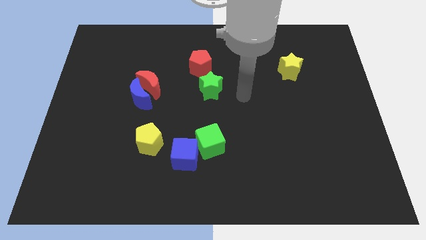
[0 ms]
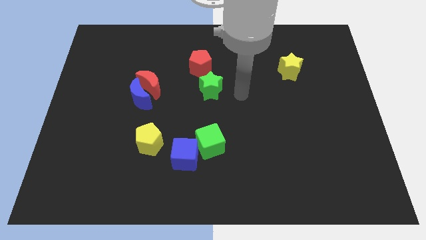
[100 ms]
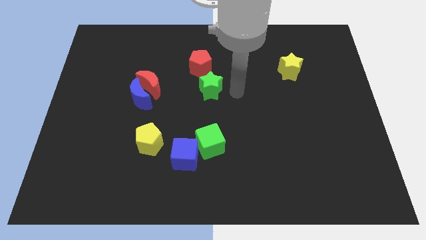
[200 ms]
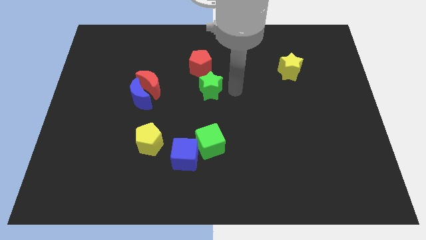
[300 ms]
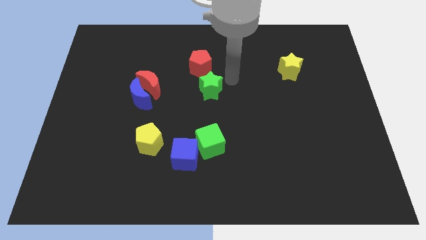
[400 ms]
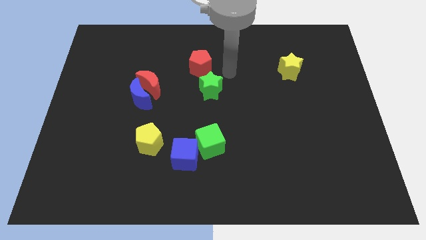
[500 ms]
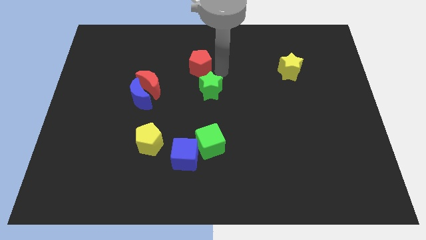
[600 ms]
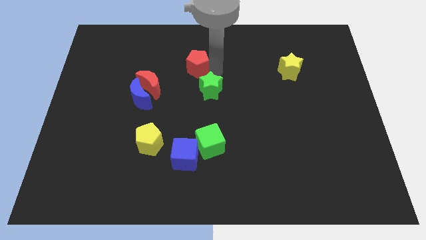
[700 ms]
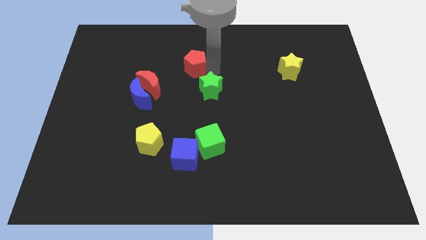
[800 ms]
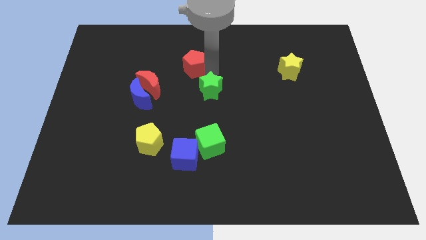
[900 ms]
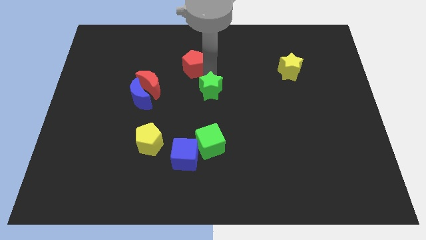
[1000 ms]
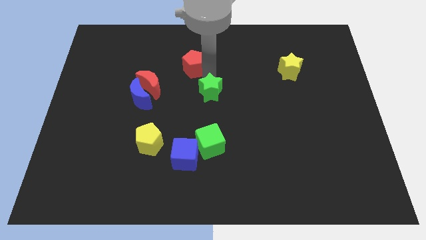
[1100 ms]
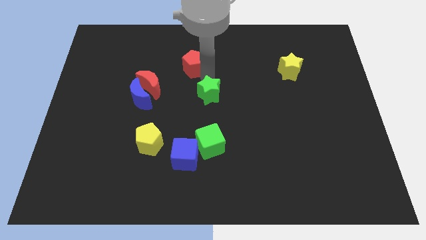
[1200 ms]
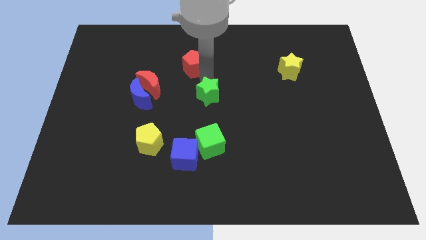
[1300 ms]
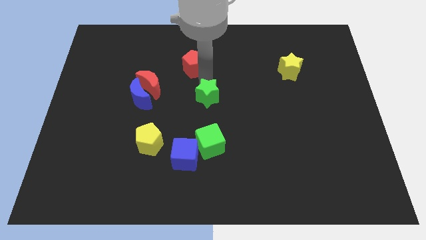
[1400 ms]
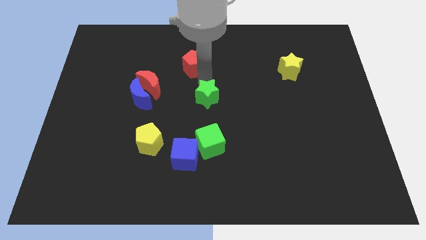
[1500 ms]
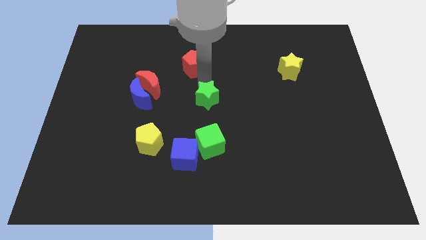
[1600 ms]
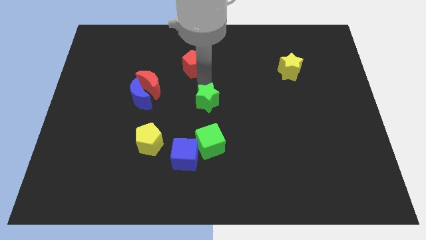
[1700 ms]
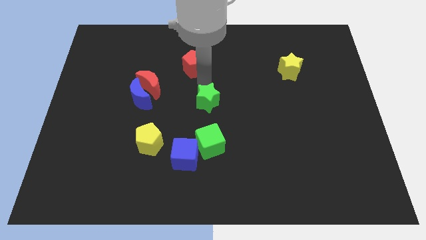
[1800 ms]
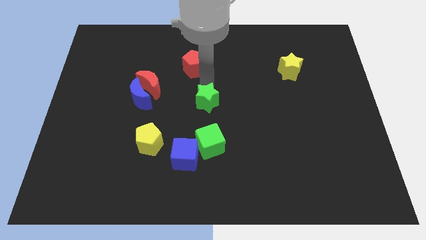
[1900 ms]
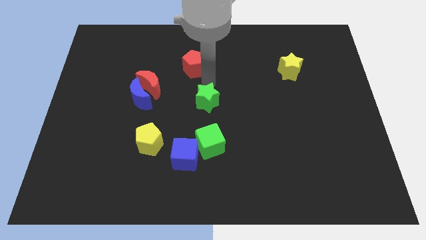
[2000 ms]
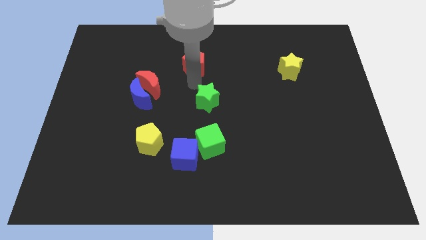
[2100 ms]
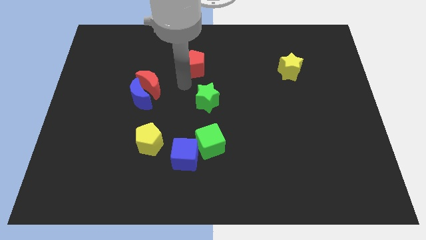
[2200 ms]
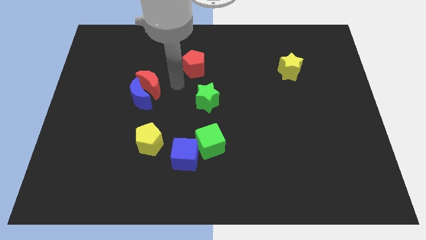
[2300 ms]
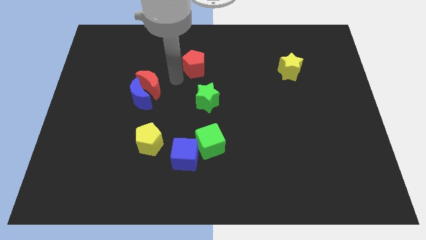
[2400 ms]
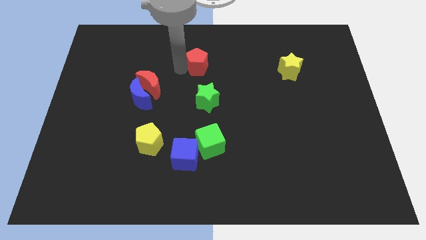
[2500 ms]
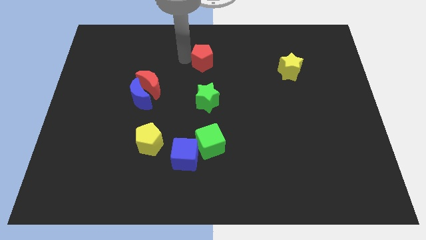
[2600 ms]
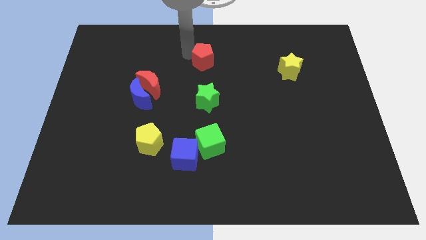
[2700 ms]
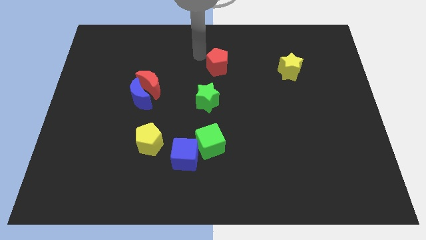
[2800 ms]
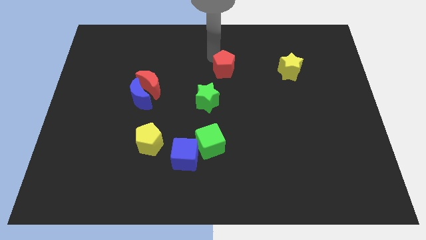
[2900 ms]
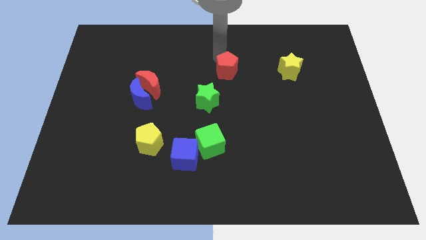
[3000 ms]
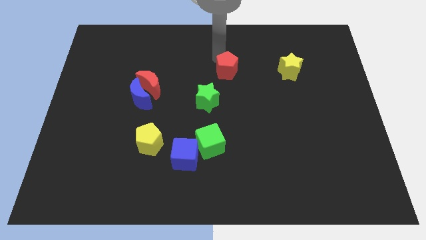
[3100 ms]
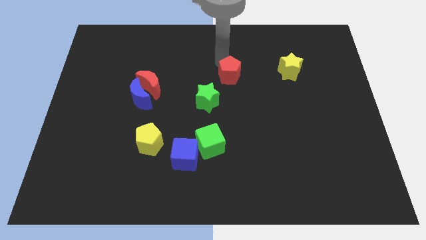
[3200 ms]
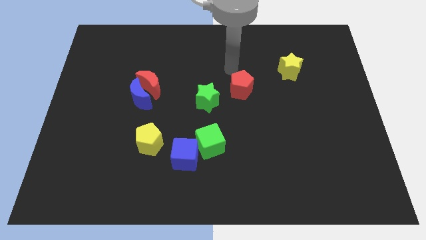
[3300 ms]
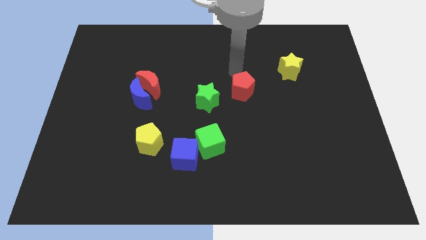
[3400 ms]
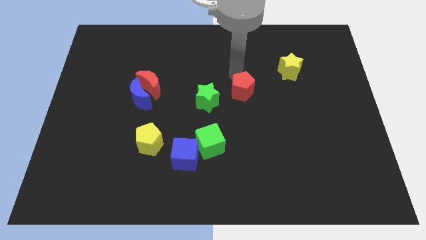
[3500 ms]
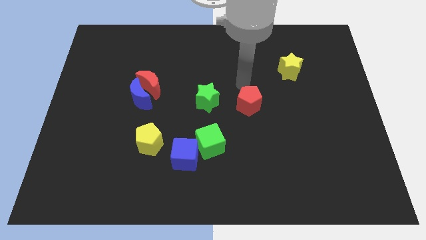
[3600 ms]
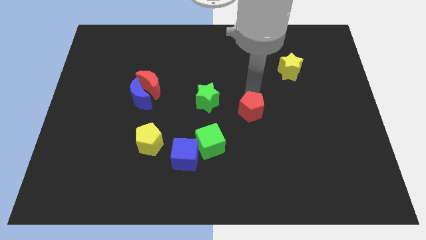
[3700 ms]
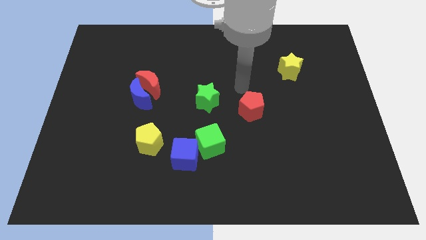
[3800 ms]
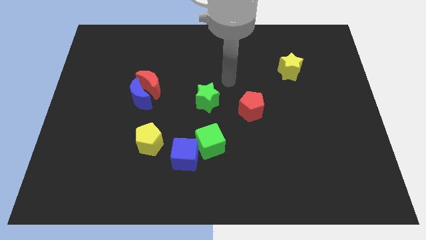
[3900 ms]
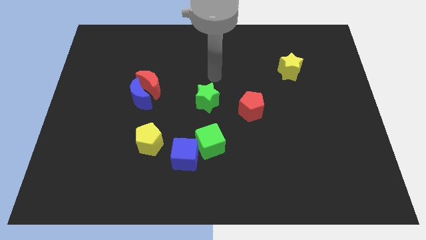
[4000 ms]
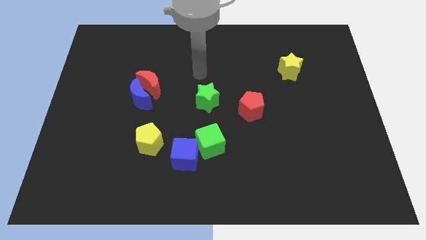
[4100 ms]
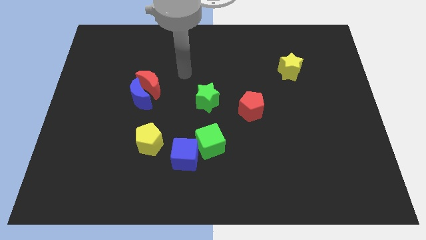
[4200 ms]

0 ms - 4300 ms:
move the red pentagon to the right of the green star

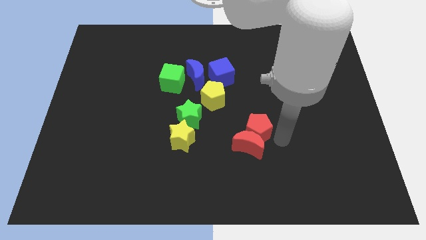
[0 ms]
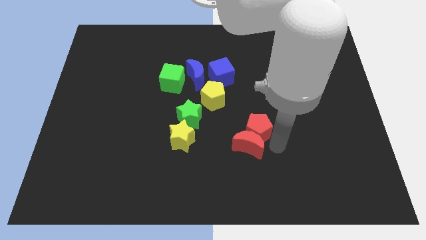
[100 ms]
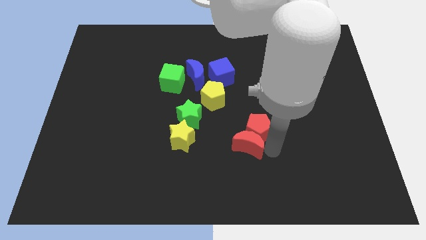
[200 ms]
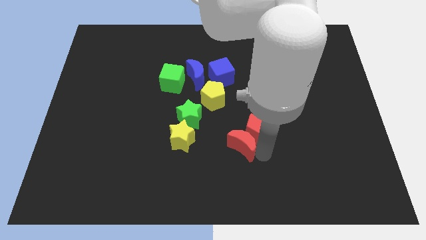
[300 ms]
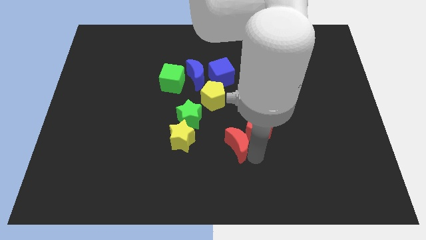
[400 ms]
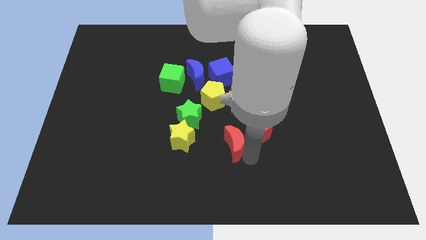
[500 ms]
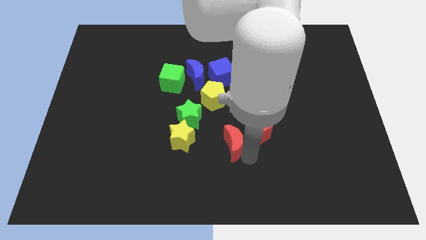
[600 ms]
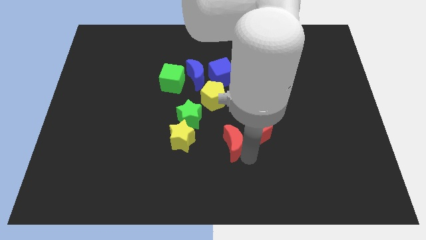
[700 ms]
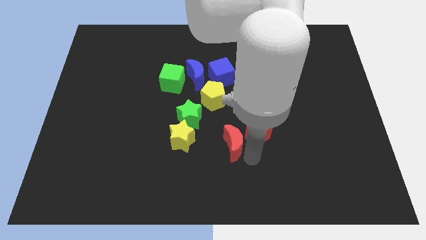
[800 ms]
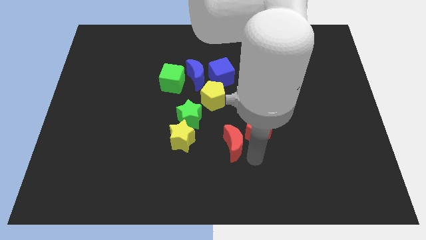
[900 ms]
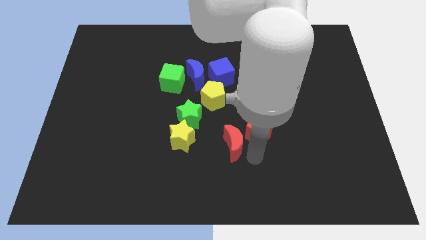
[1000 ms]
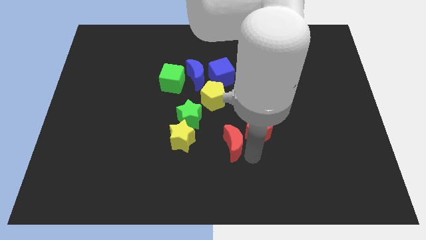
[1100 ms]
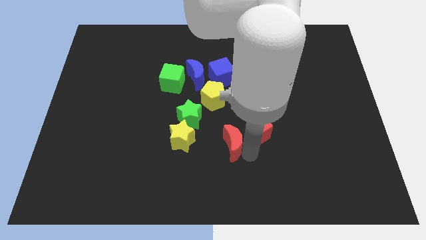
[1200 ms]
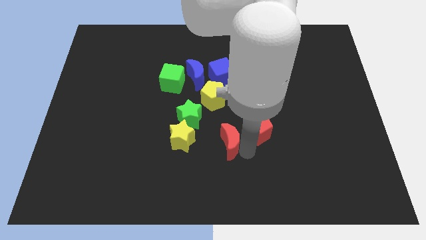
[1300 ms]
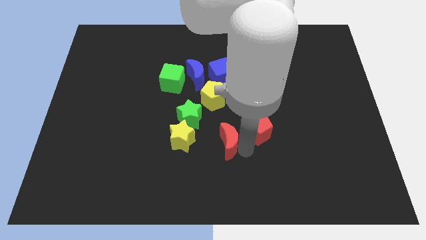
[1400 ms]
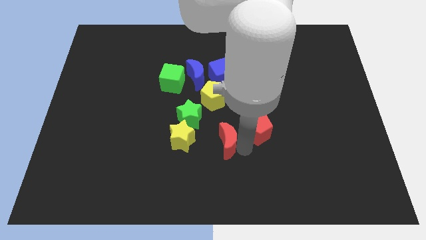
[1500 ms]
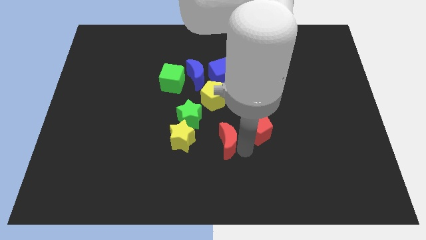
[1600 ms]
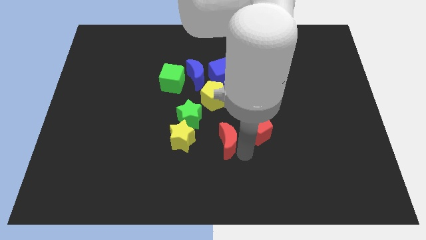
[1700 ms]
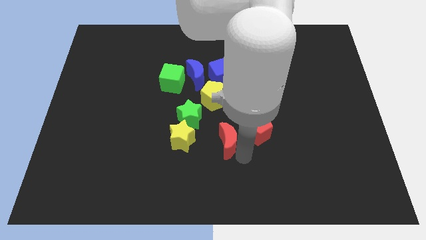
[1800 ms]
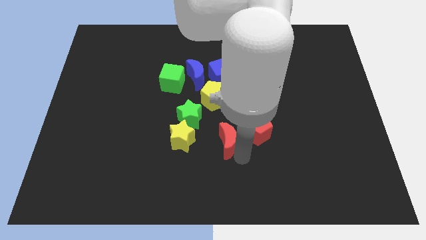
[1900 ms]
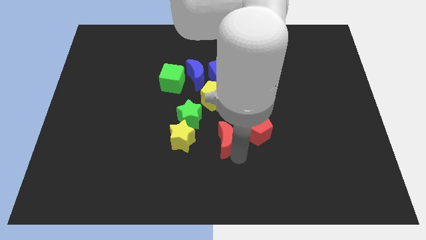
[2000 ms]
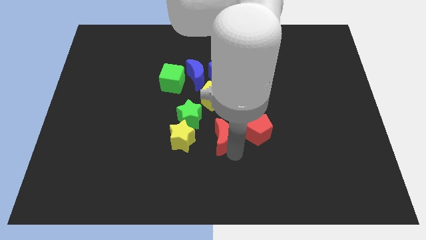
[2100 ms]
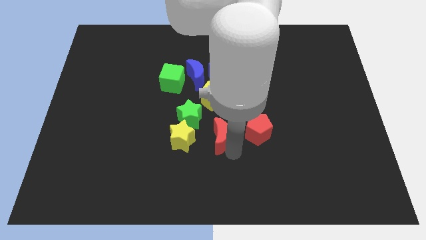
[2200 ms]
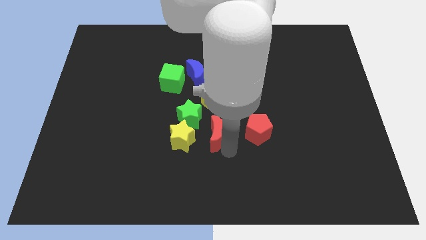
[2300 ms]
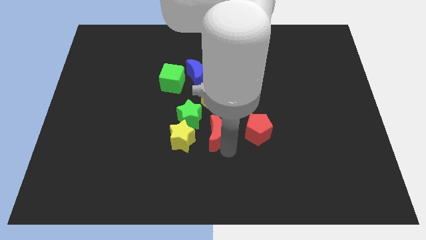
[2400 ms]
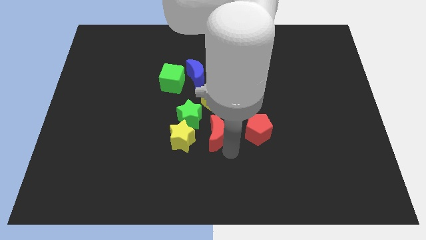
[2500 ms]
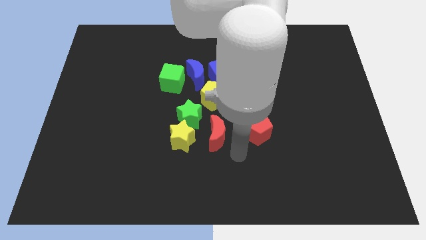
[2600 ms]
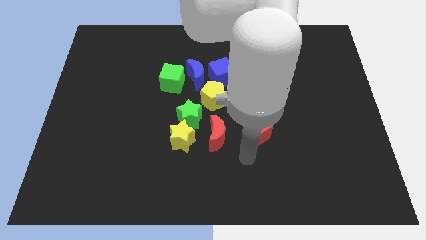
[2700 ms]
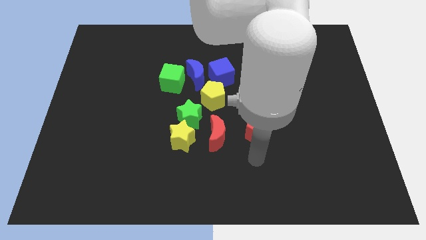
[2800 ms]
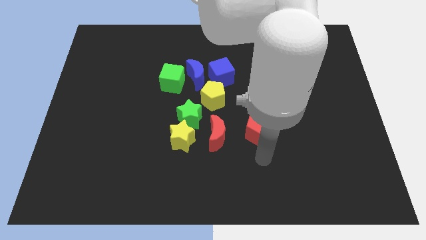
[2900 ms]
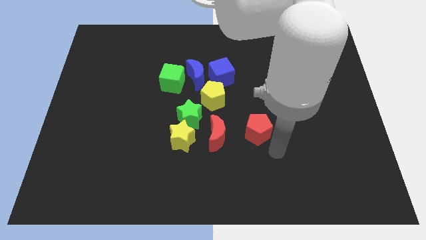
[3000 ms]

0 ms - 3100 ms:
push the red crescent towards the green star

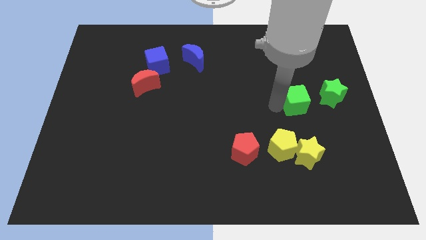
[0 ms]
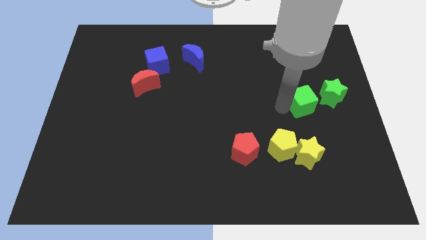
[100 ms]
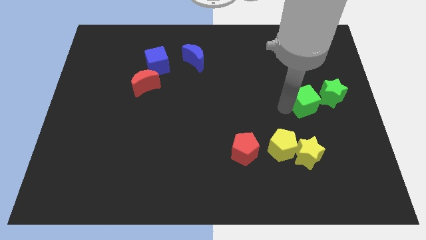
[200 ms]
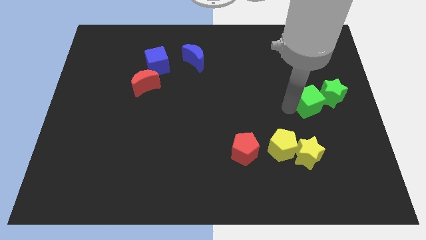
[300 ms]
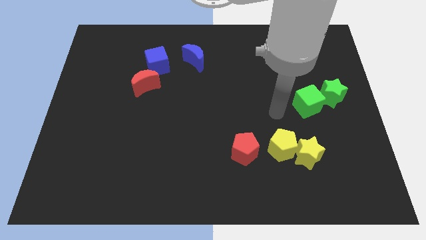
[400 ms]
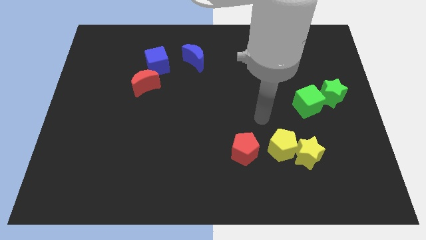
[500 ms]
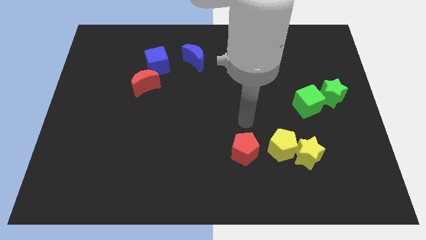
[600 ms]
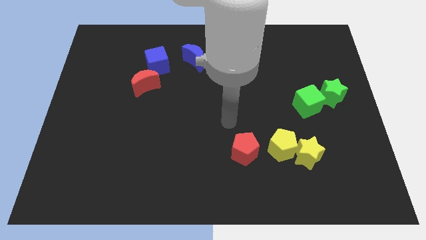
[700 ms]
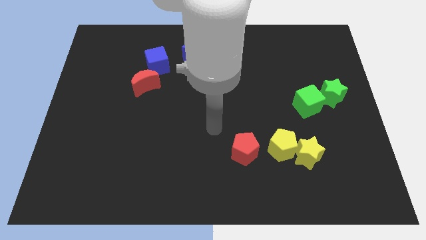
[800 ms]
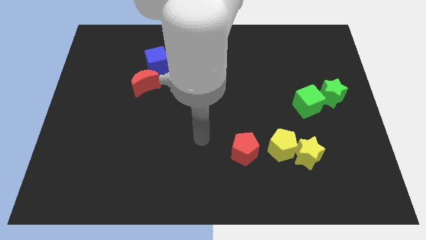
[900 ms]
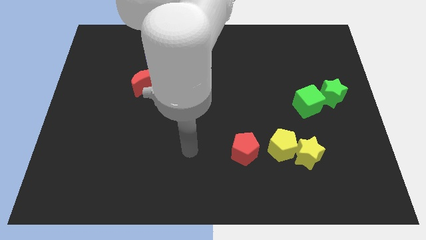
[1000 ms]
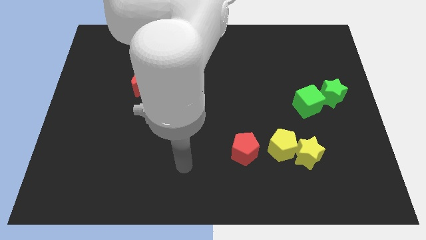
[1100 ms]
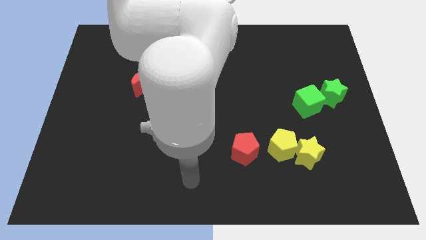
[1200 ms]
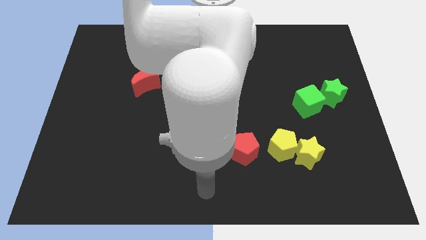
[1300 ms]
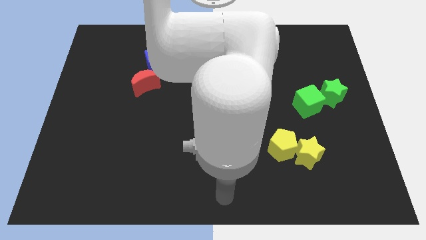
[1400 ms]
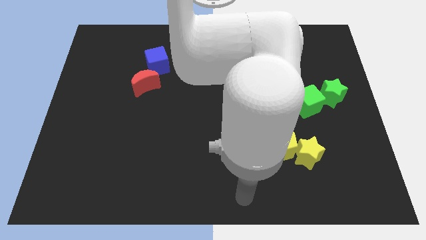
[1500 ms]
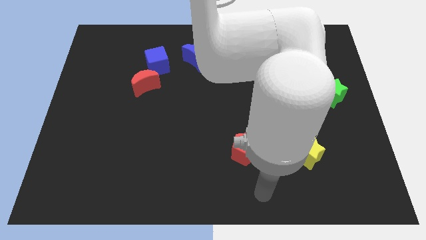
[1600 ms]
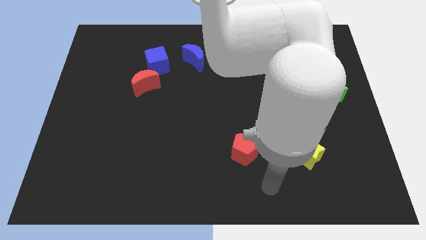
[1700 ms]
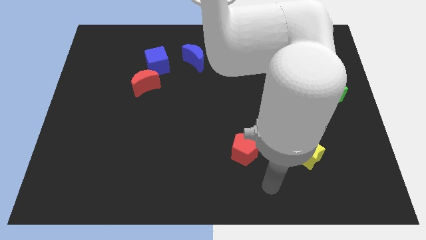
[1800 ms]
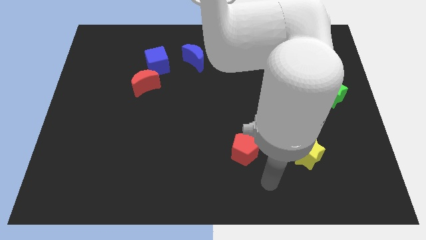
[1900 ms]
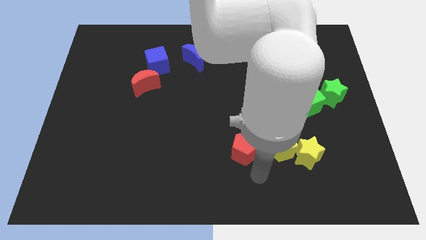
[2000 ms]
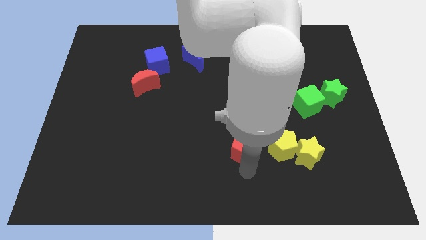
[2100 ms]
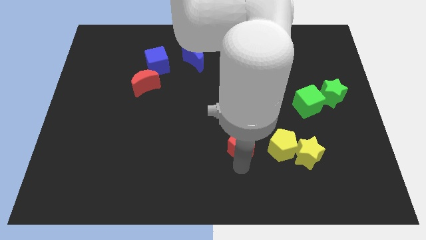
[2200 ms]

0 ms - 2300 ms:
place your arm down to the red pentagon
